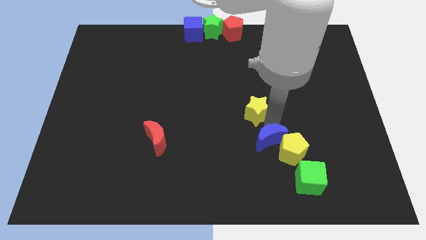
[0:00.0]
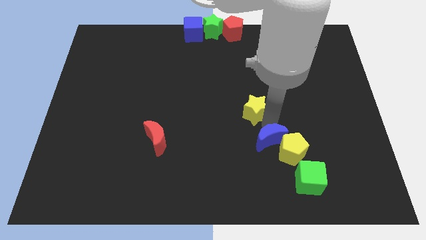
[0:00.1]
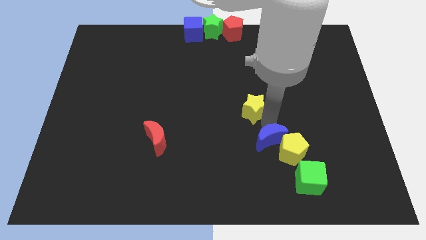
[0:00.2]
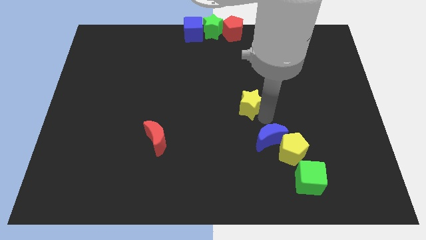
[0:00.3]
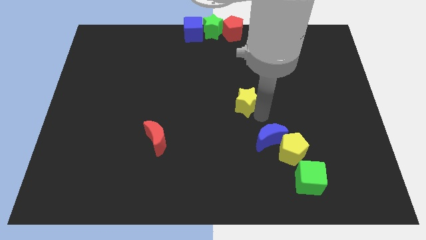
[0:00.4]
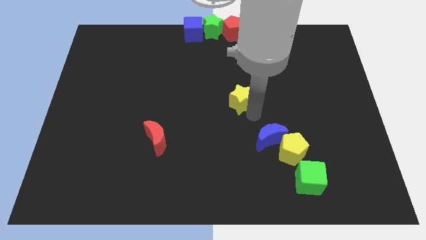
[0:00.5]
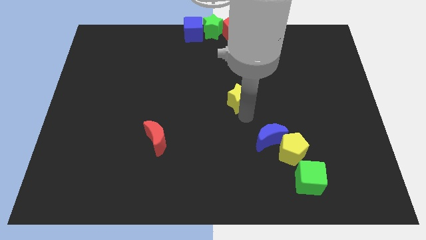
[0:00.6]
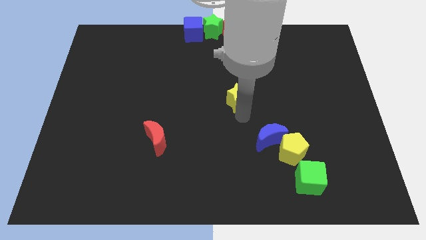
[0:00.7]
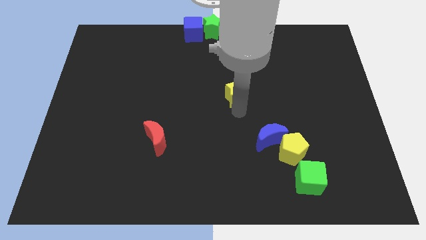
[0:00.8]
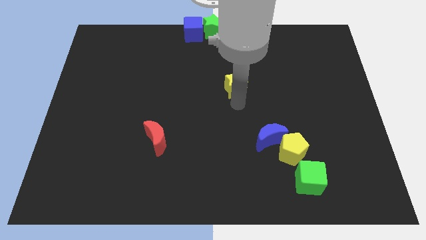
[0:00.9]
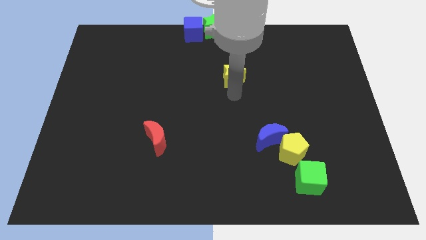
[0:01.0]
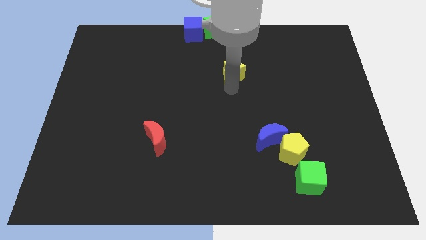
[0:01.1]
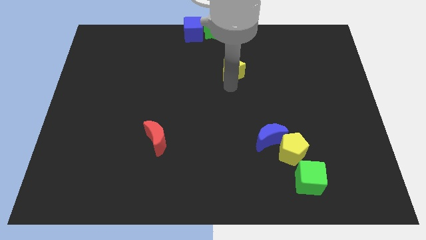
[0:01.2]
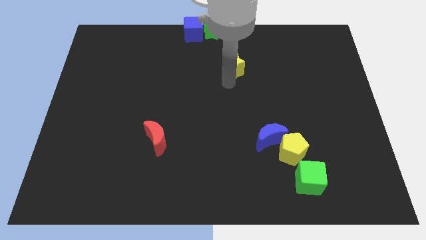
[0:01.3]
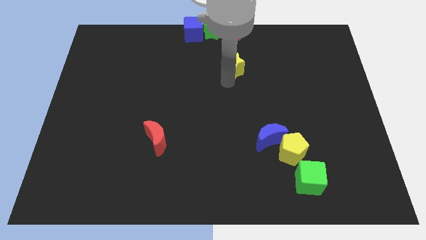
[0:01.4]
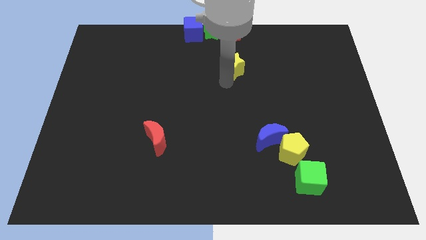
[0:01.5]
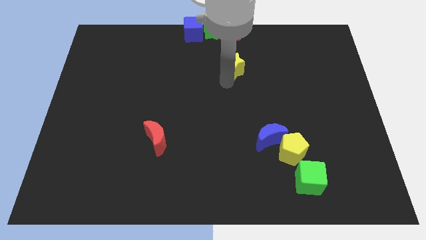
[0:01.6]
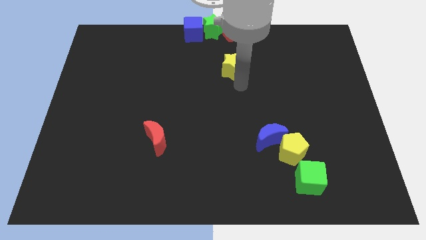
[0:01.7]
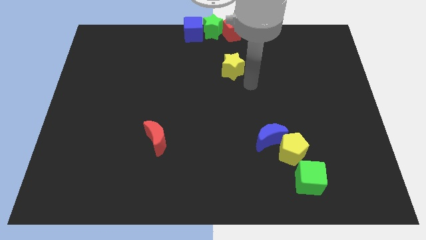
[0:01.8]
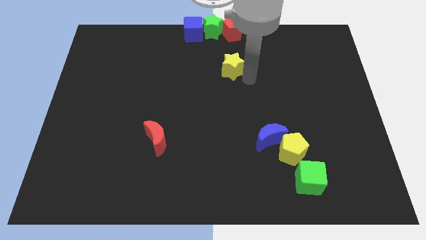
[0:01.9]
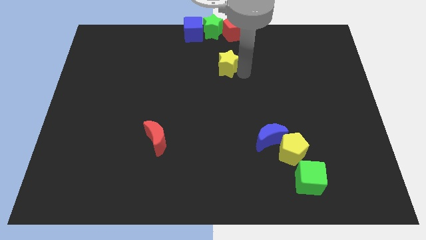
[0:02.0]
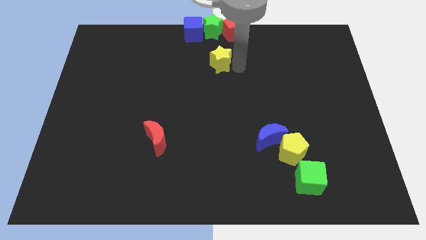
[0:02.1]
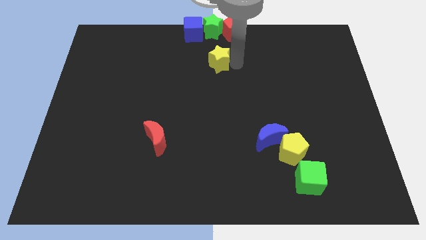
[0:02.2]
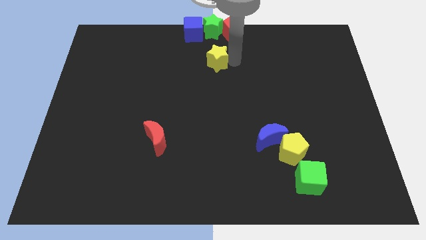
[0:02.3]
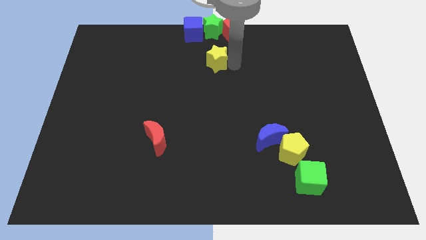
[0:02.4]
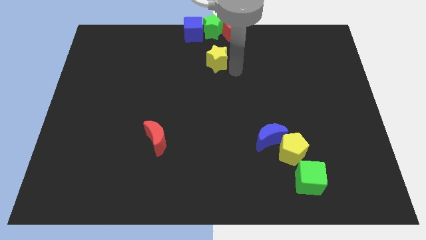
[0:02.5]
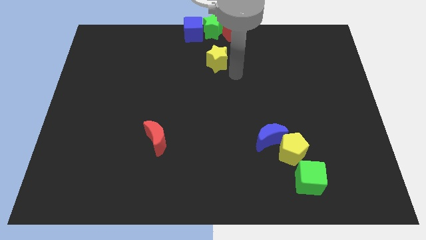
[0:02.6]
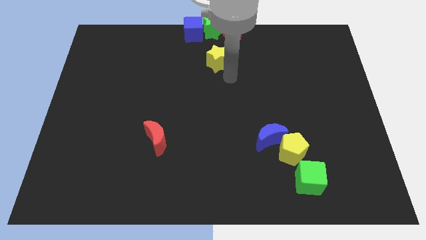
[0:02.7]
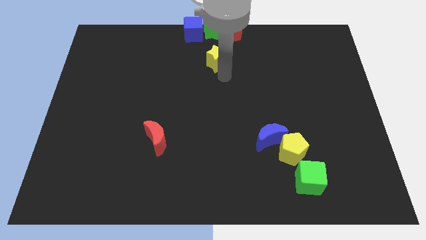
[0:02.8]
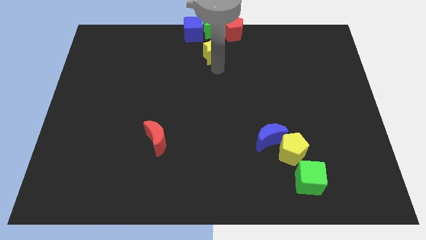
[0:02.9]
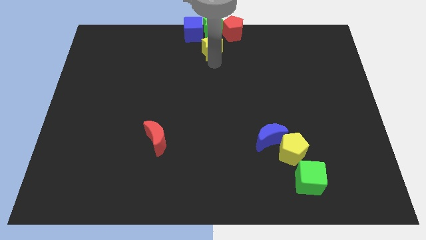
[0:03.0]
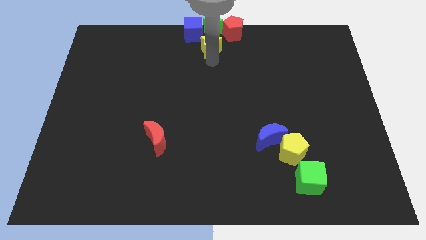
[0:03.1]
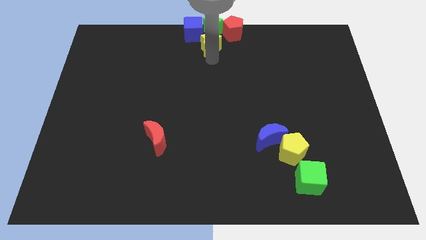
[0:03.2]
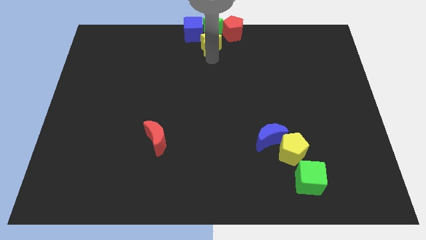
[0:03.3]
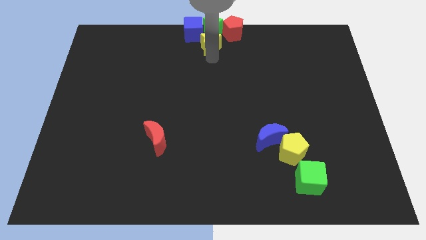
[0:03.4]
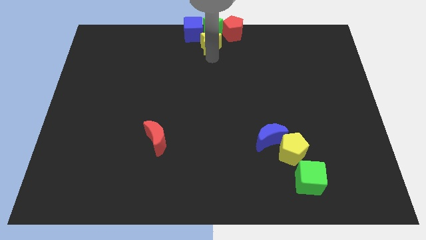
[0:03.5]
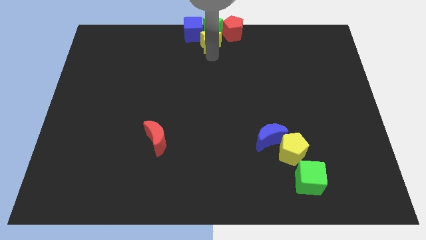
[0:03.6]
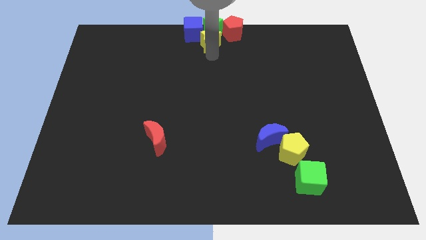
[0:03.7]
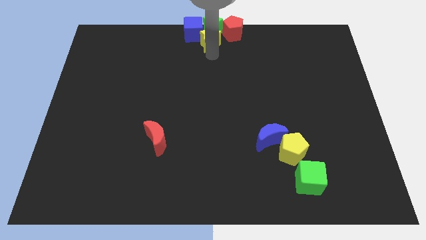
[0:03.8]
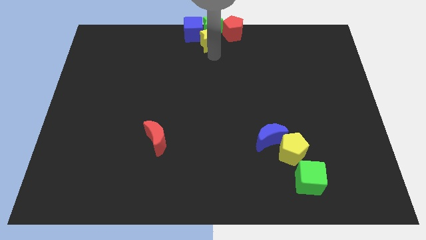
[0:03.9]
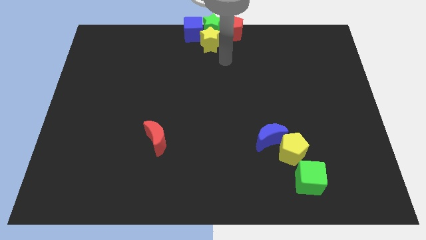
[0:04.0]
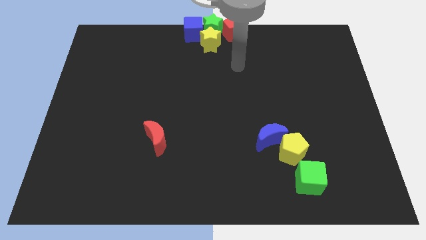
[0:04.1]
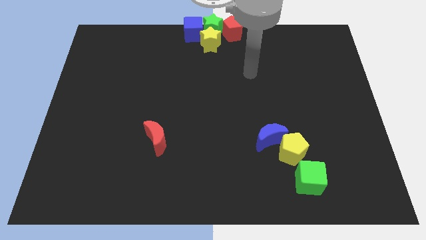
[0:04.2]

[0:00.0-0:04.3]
push yellow star into green star

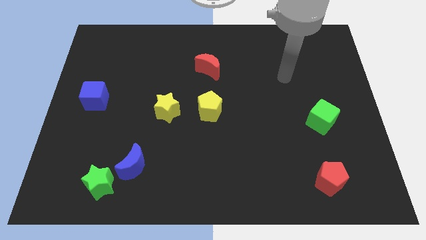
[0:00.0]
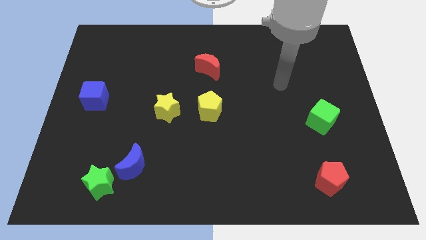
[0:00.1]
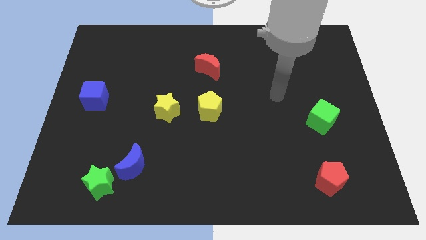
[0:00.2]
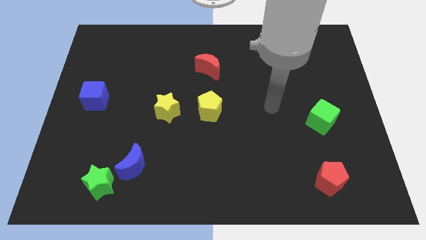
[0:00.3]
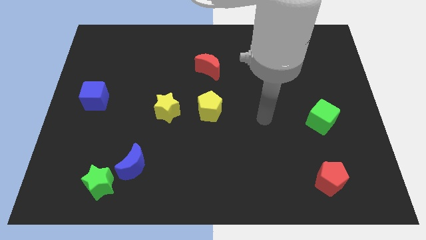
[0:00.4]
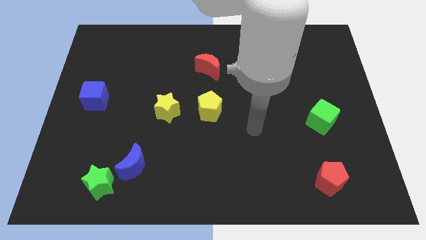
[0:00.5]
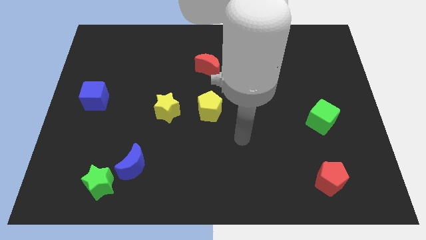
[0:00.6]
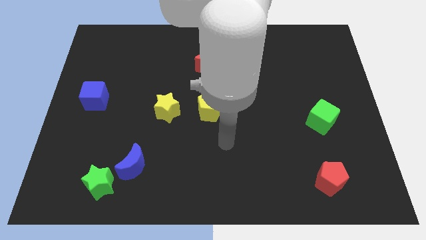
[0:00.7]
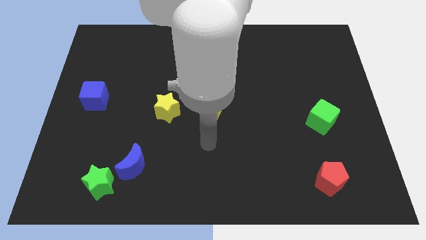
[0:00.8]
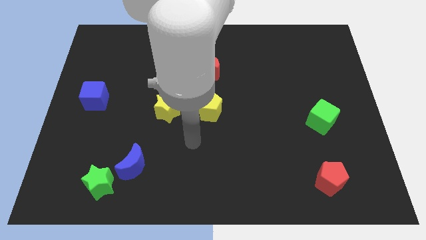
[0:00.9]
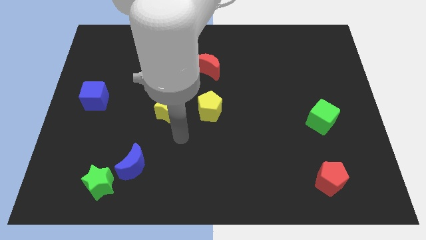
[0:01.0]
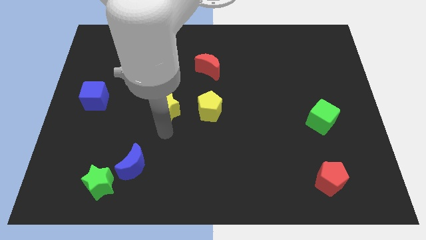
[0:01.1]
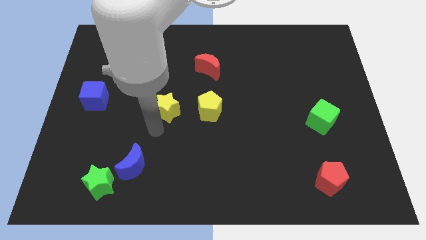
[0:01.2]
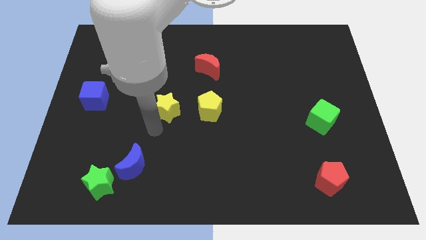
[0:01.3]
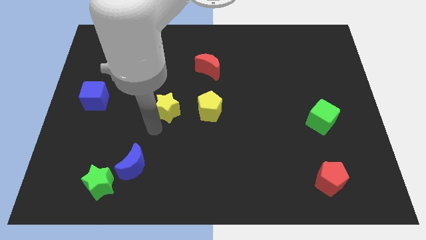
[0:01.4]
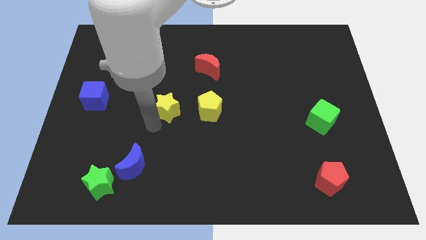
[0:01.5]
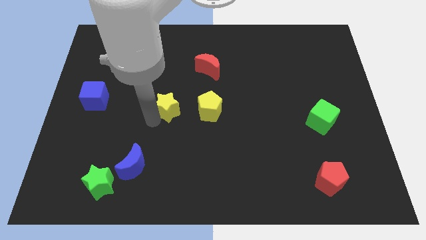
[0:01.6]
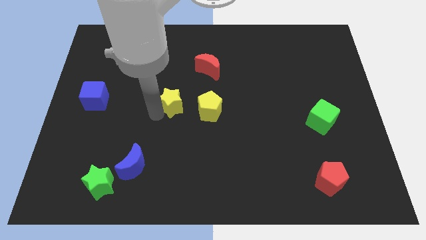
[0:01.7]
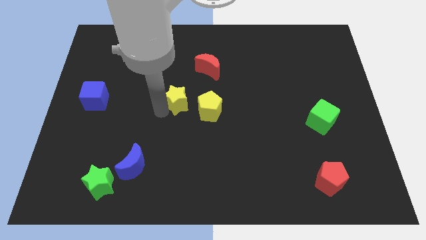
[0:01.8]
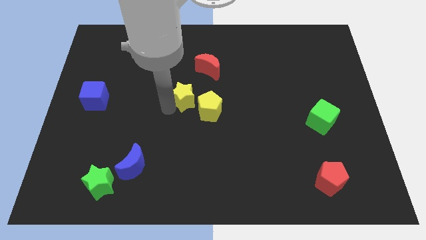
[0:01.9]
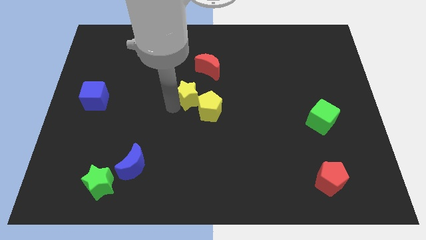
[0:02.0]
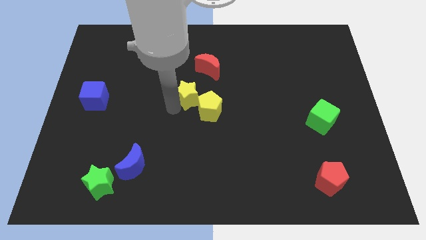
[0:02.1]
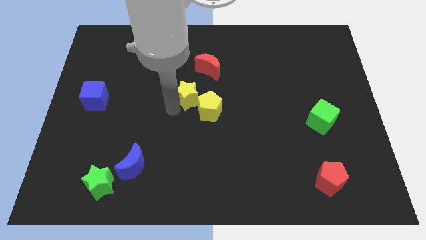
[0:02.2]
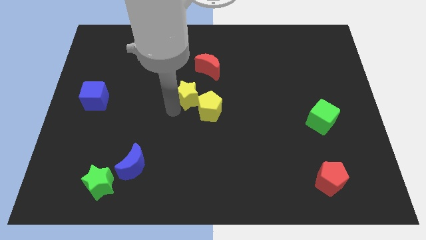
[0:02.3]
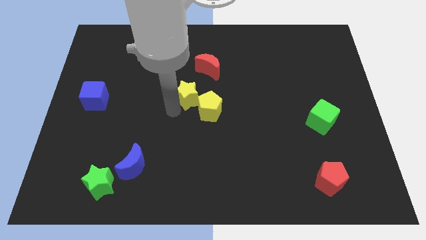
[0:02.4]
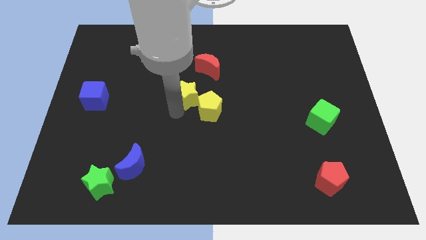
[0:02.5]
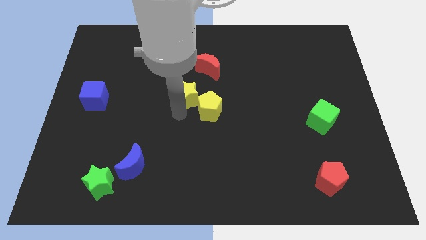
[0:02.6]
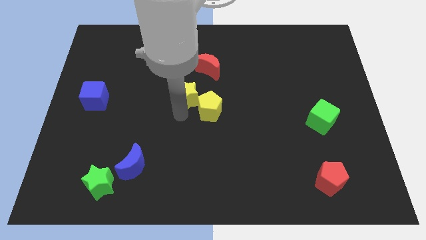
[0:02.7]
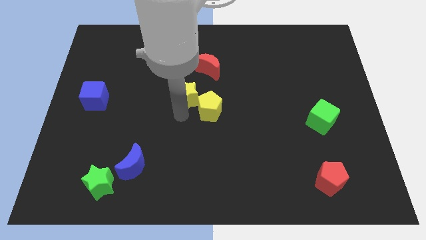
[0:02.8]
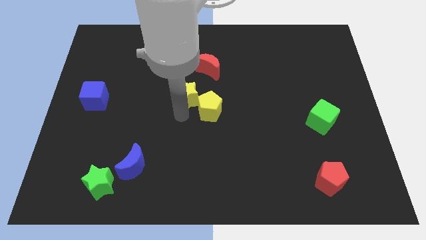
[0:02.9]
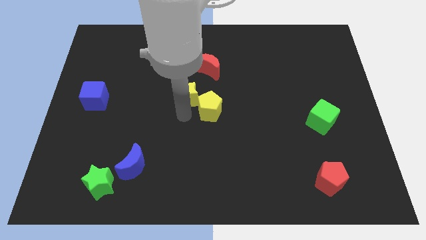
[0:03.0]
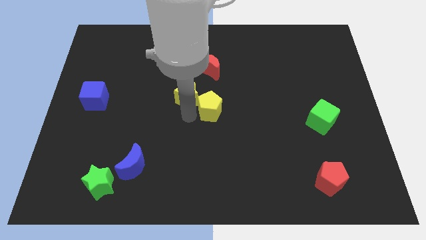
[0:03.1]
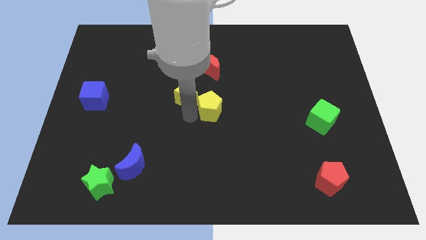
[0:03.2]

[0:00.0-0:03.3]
move the yellow star to the left of the yellow pentagon

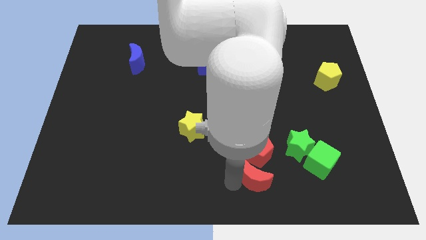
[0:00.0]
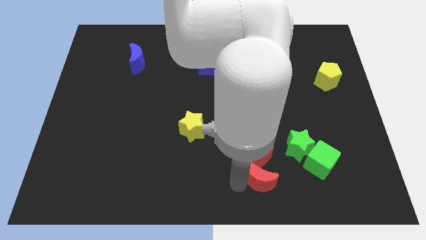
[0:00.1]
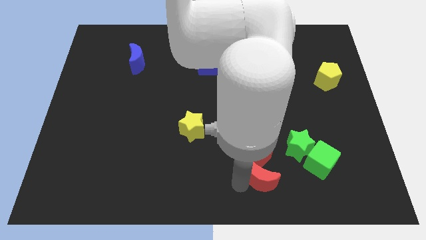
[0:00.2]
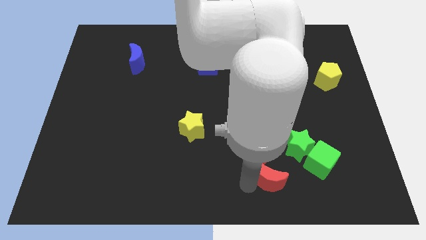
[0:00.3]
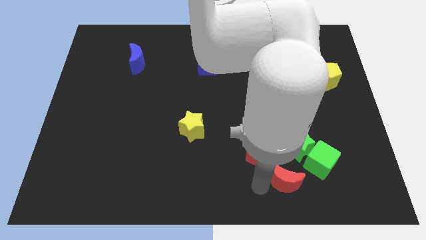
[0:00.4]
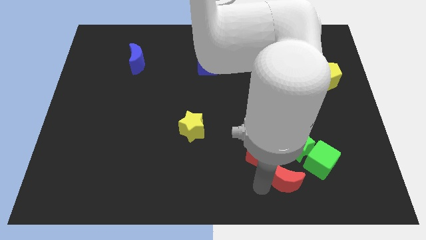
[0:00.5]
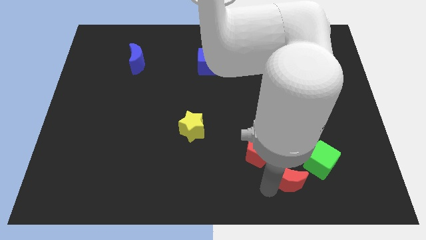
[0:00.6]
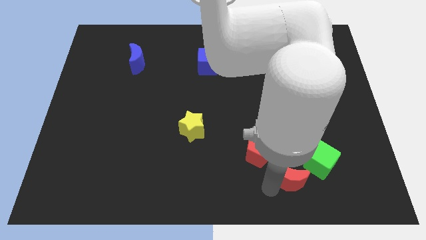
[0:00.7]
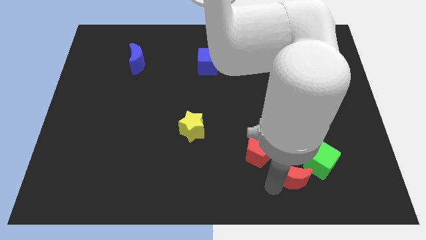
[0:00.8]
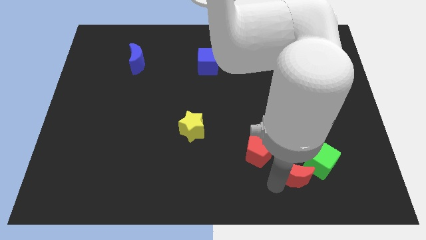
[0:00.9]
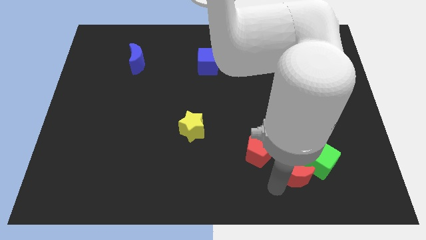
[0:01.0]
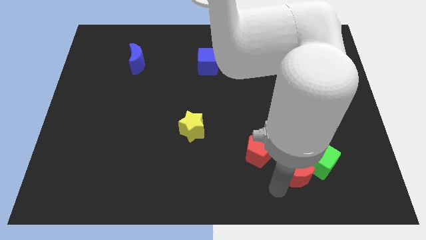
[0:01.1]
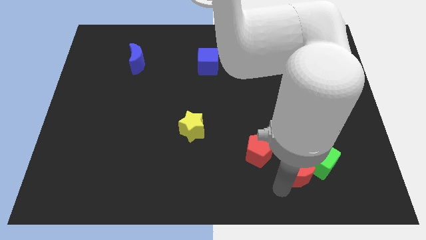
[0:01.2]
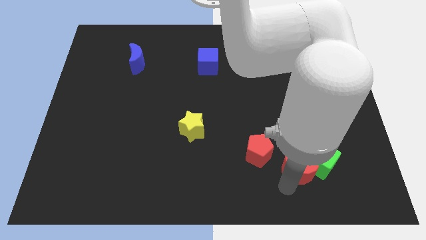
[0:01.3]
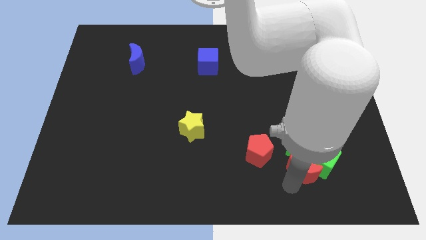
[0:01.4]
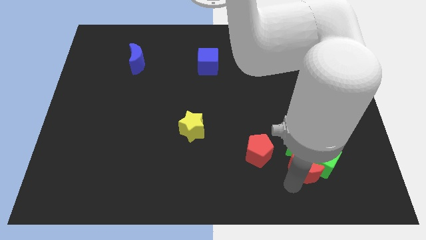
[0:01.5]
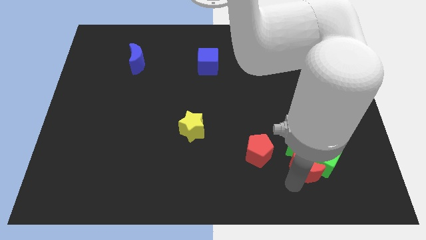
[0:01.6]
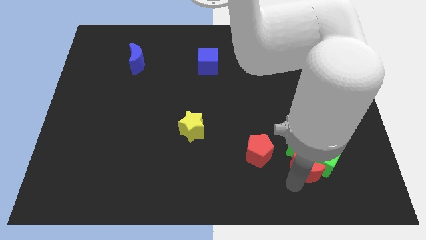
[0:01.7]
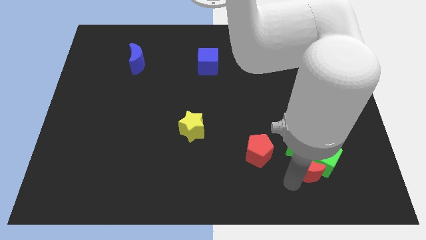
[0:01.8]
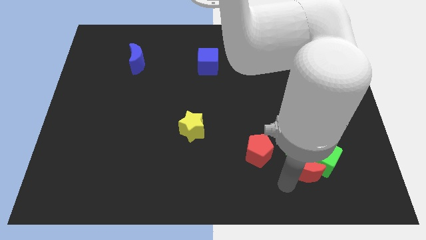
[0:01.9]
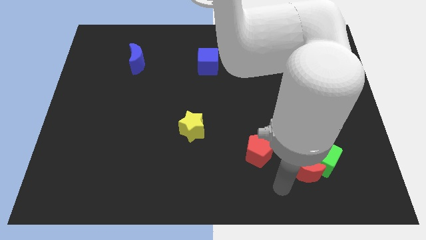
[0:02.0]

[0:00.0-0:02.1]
push the red moon at the bottom side of both the green blocks
